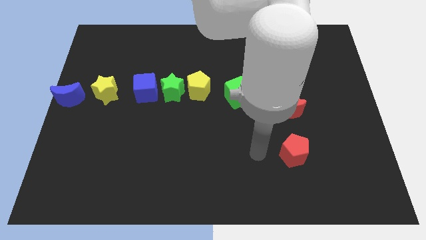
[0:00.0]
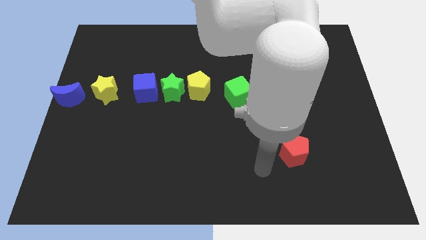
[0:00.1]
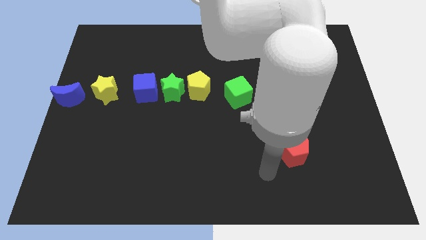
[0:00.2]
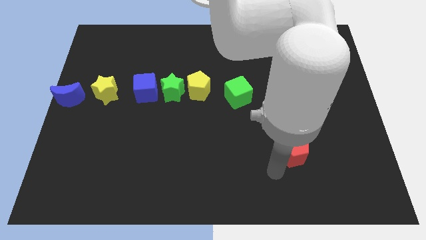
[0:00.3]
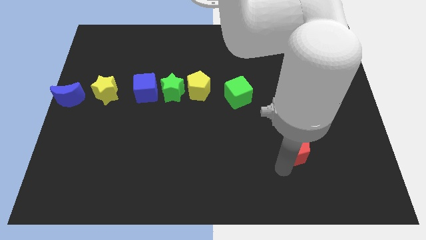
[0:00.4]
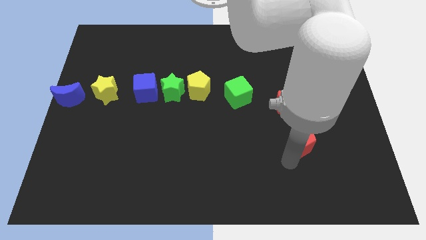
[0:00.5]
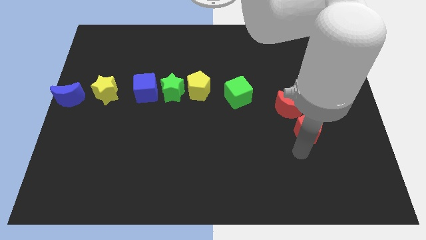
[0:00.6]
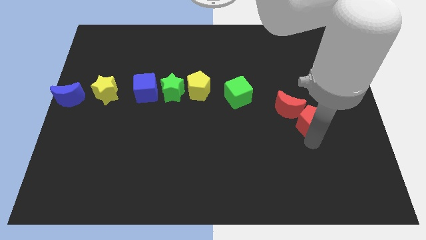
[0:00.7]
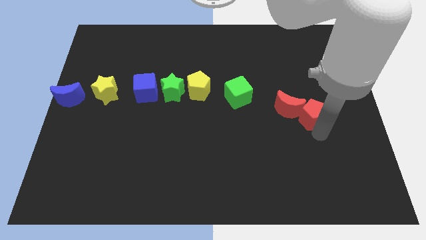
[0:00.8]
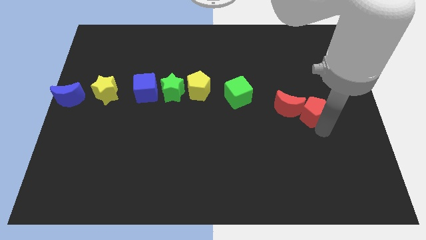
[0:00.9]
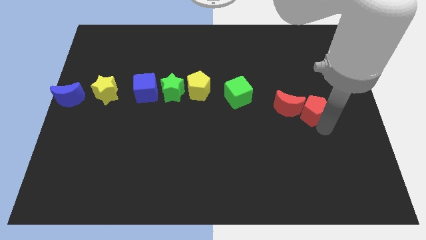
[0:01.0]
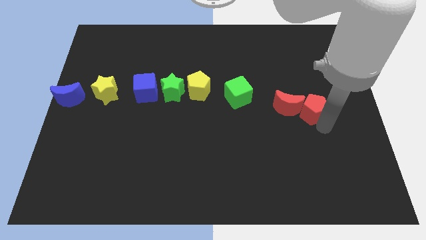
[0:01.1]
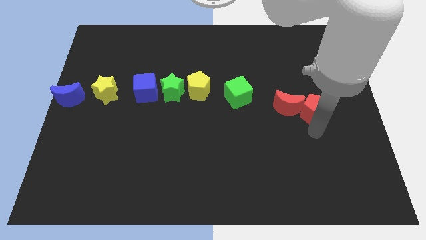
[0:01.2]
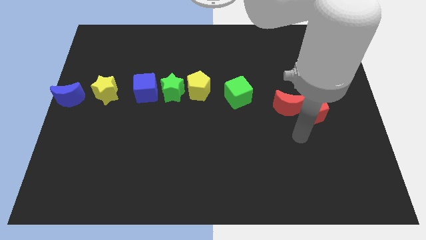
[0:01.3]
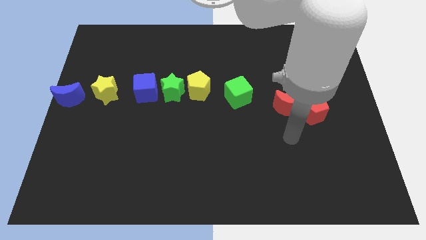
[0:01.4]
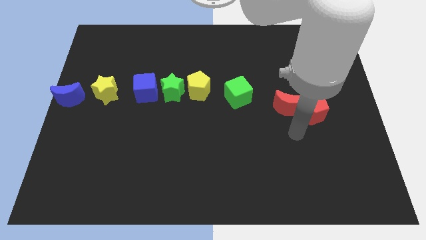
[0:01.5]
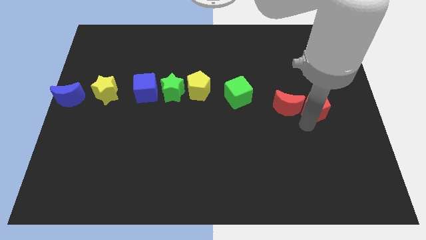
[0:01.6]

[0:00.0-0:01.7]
place red pentagon to the right side of red moon

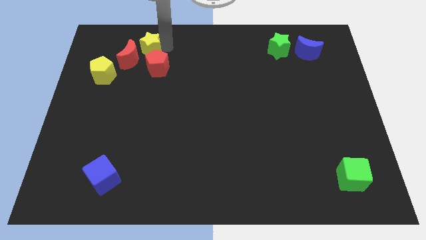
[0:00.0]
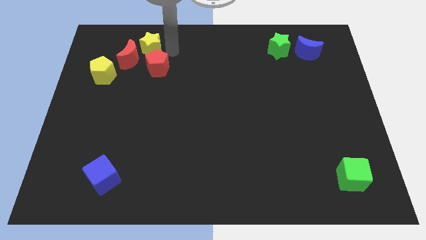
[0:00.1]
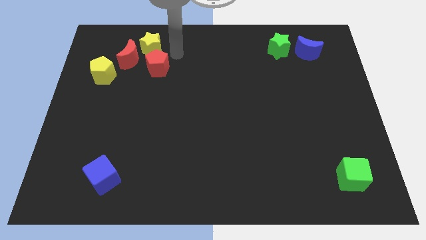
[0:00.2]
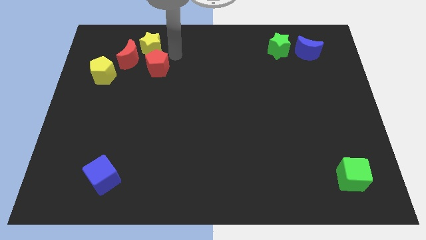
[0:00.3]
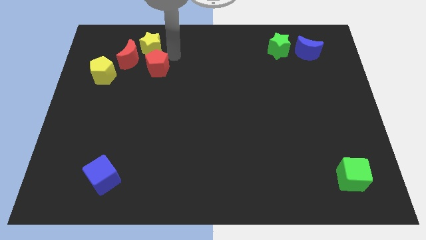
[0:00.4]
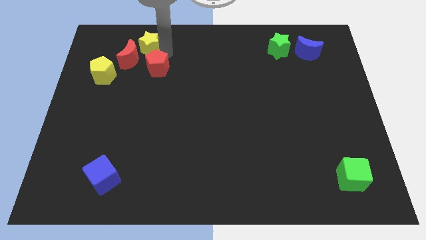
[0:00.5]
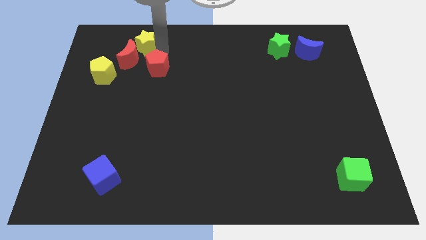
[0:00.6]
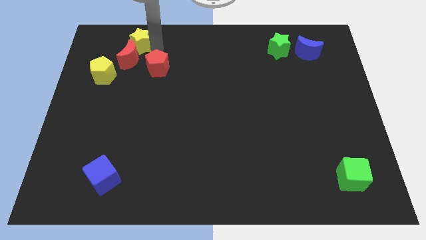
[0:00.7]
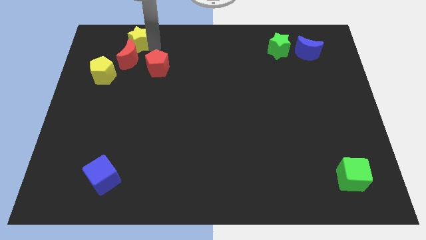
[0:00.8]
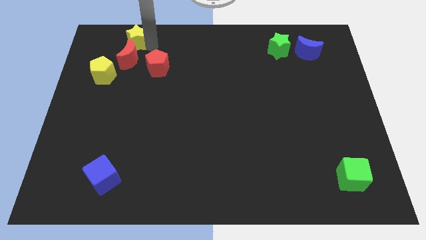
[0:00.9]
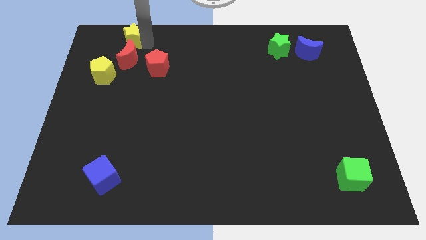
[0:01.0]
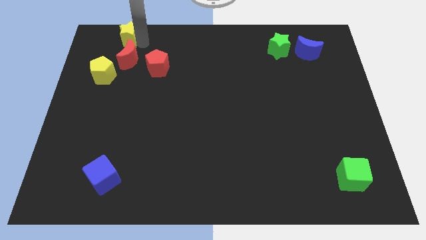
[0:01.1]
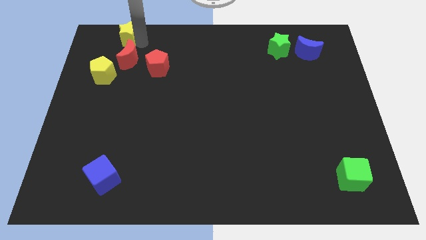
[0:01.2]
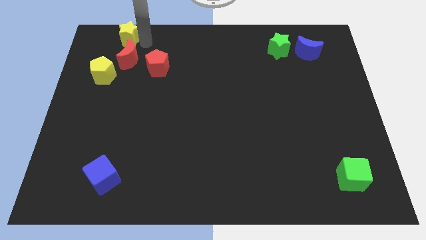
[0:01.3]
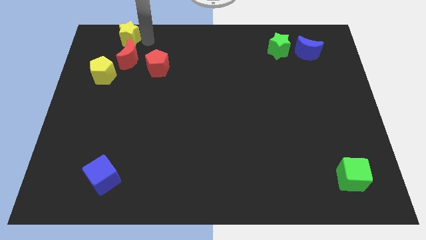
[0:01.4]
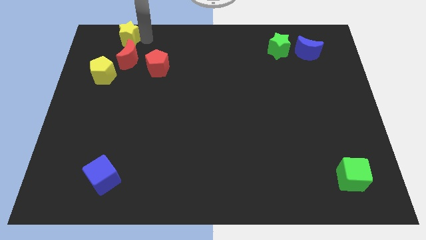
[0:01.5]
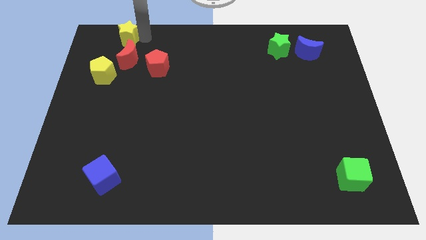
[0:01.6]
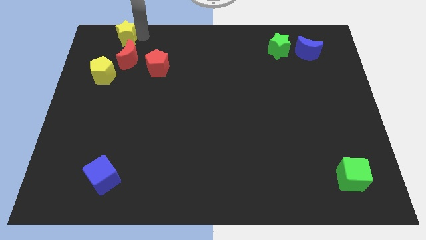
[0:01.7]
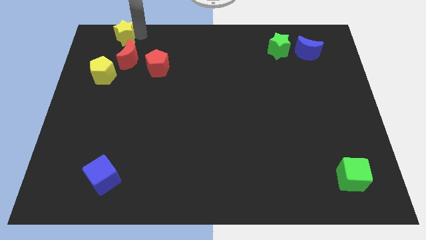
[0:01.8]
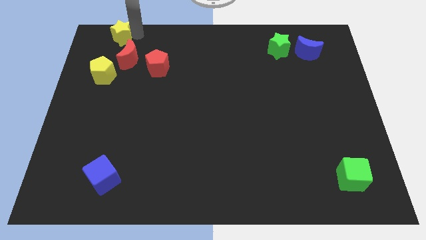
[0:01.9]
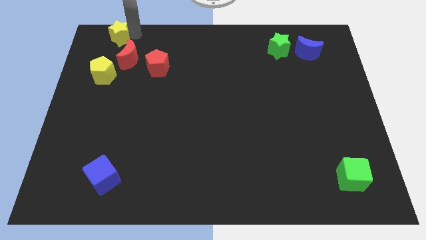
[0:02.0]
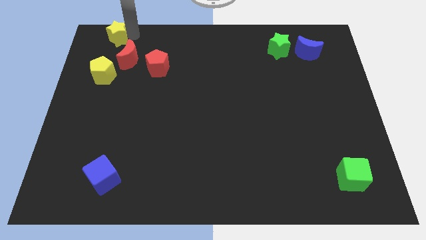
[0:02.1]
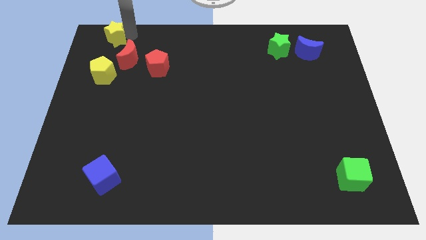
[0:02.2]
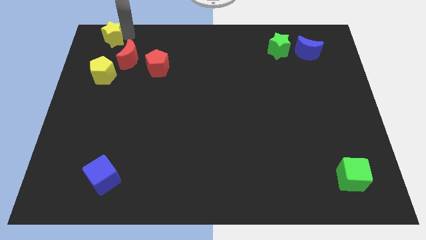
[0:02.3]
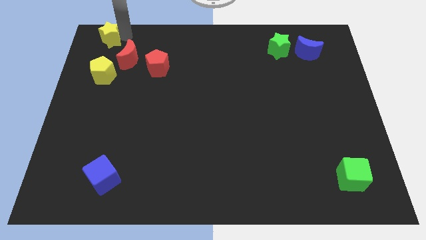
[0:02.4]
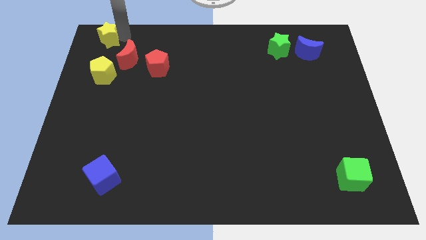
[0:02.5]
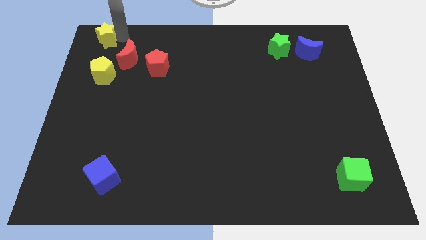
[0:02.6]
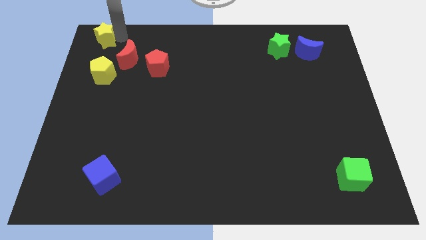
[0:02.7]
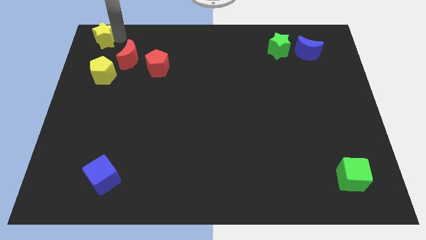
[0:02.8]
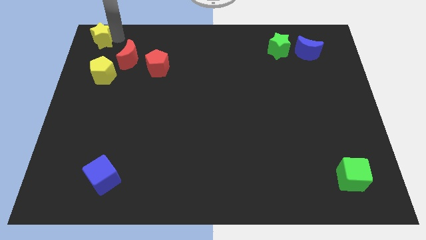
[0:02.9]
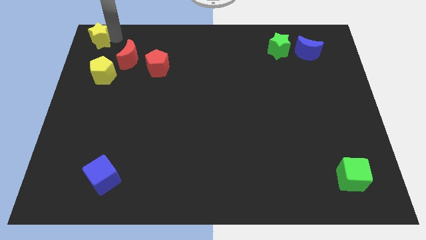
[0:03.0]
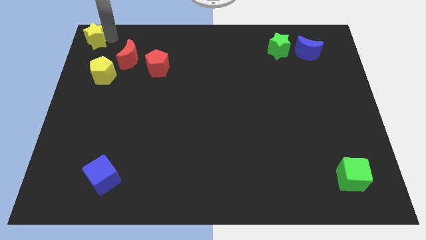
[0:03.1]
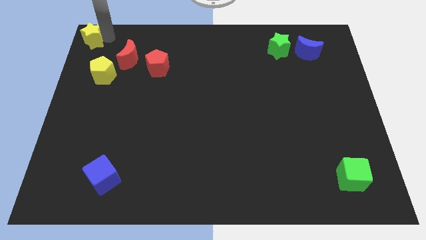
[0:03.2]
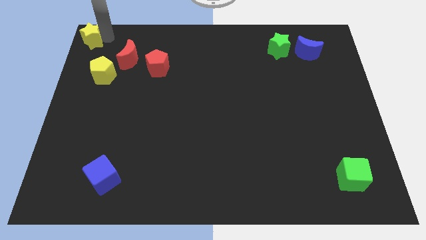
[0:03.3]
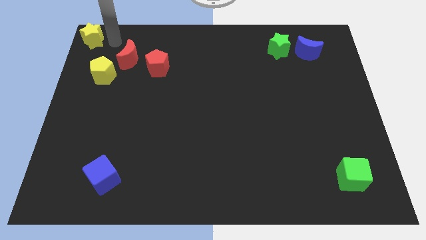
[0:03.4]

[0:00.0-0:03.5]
move the yellow star to the top left corner of the board

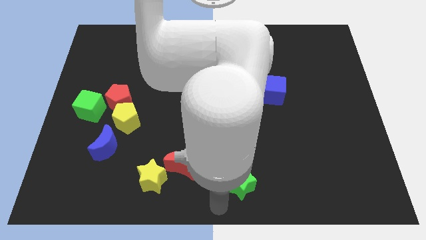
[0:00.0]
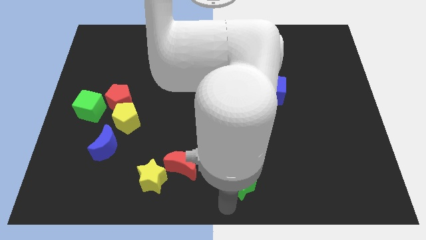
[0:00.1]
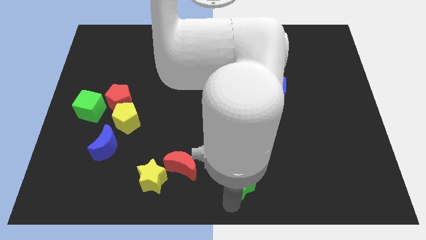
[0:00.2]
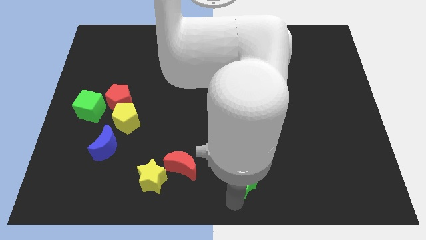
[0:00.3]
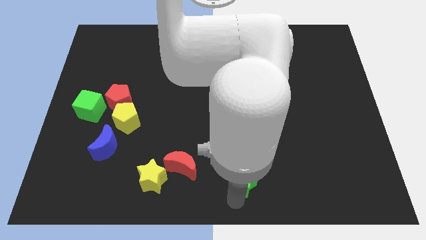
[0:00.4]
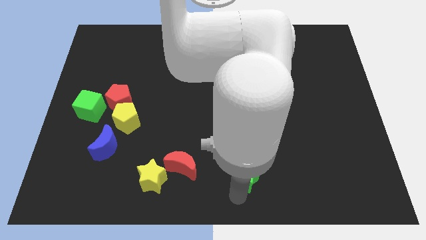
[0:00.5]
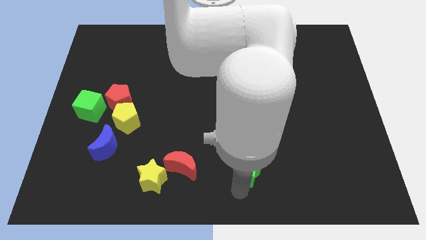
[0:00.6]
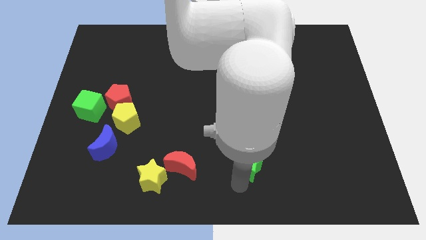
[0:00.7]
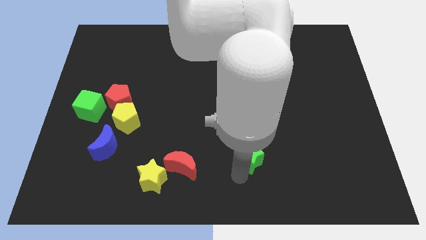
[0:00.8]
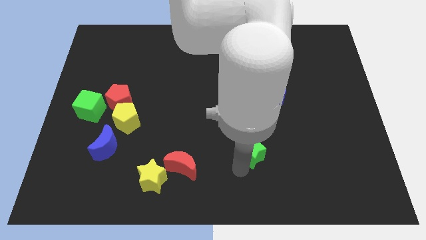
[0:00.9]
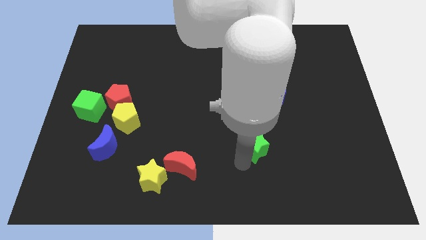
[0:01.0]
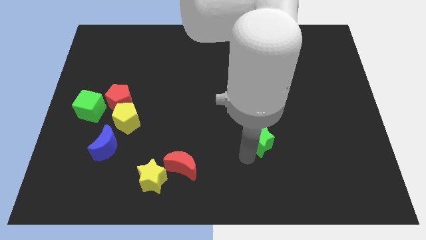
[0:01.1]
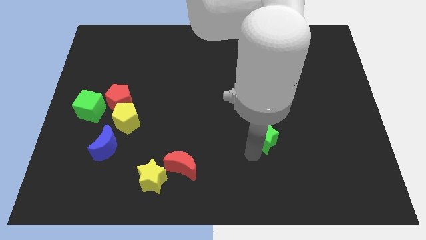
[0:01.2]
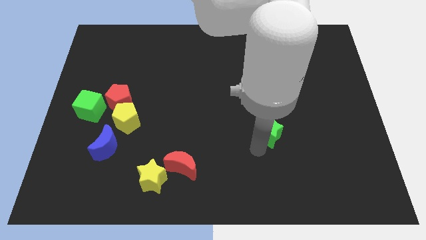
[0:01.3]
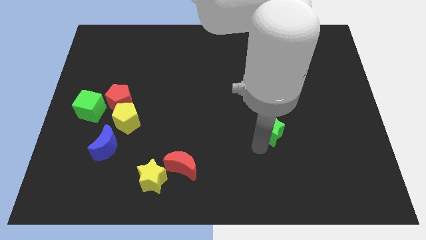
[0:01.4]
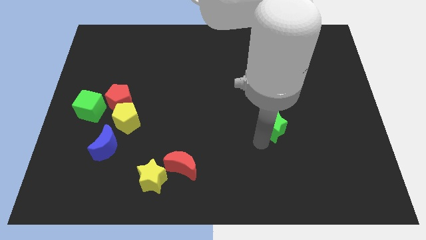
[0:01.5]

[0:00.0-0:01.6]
push the green star slightly to the top of the board

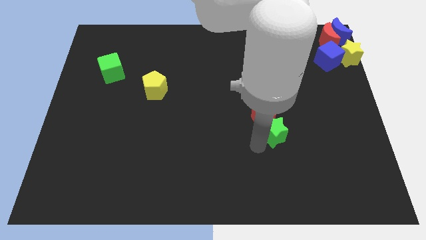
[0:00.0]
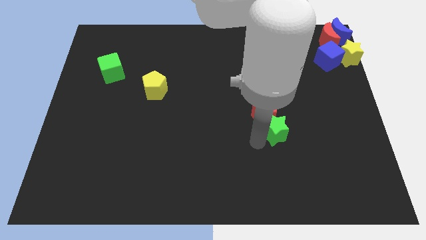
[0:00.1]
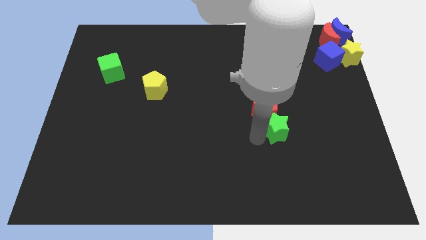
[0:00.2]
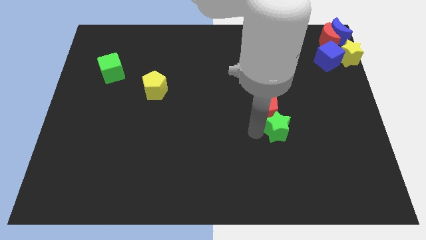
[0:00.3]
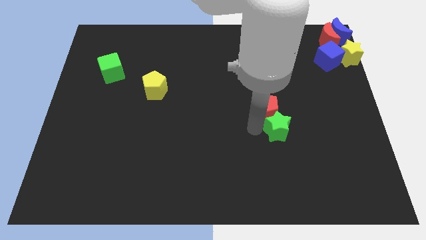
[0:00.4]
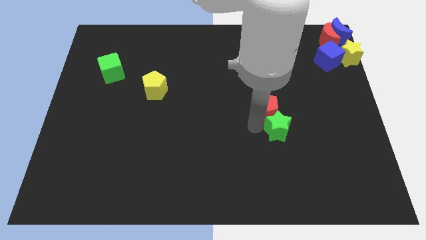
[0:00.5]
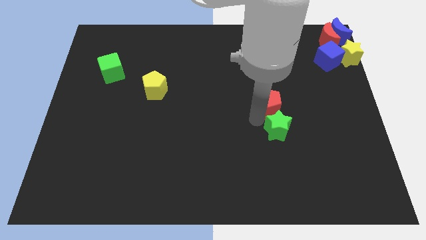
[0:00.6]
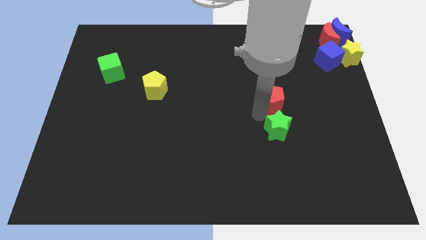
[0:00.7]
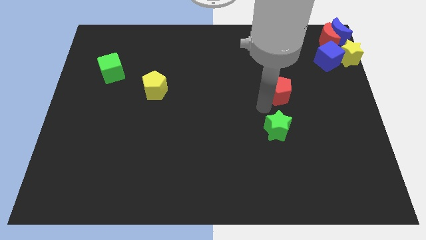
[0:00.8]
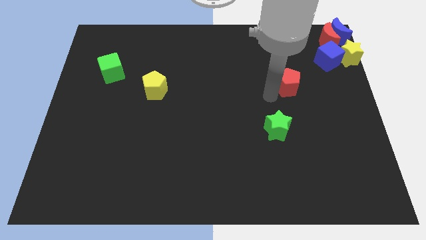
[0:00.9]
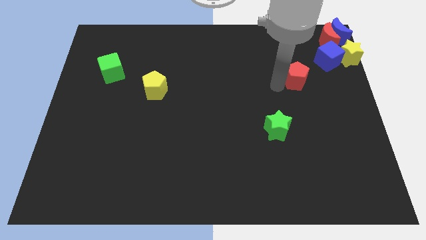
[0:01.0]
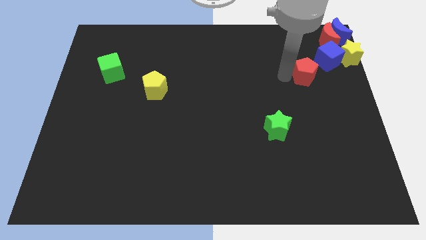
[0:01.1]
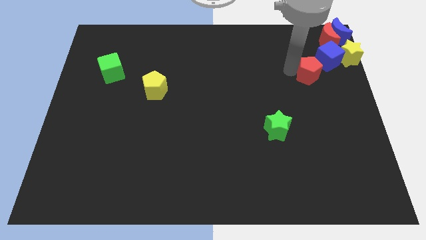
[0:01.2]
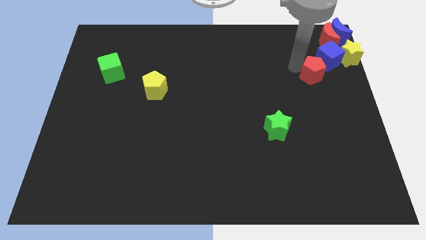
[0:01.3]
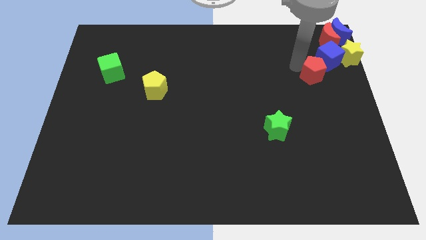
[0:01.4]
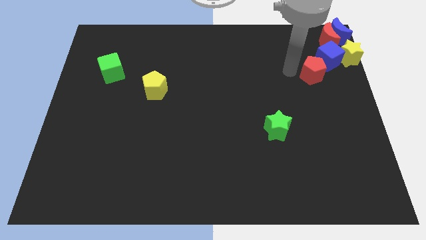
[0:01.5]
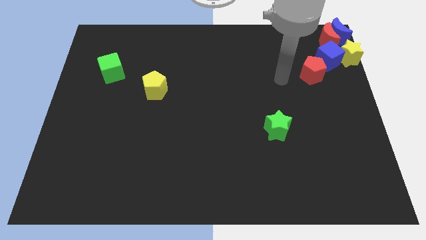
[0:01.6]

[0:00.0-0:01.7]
take the red pentagon close to the blue cube

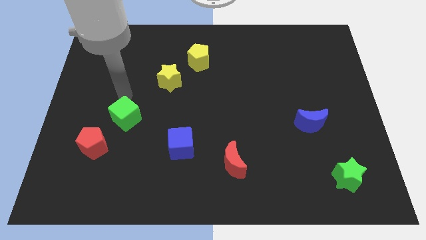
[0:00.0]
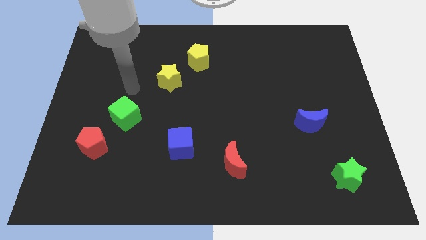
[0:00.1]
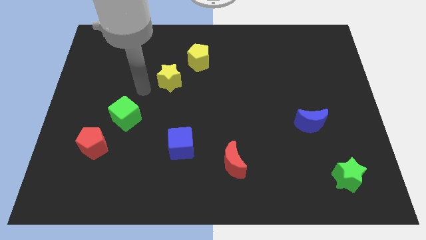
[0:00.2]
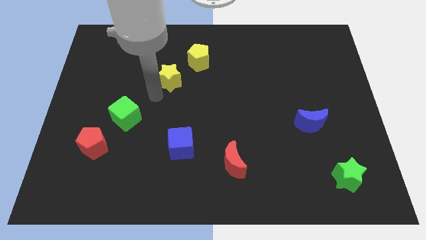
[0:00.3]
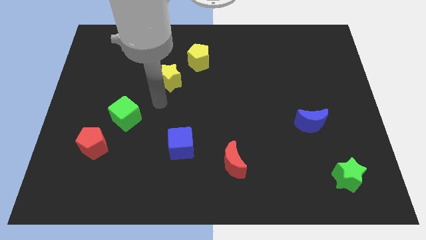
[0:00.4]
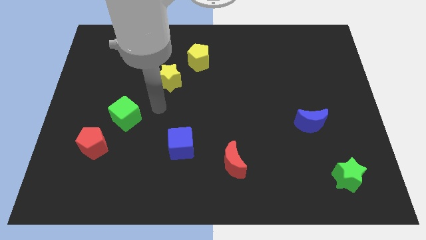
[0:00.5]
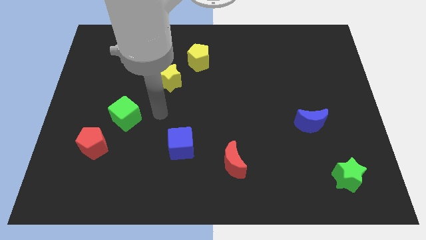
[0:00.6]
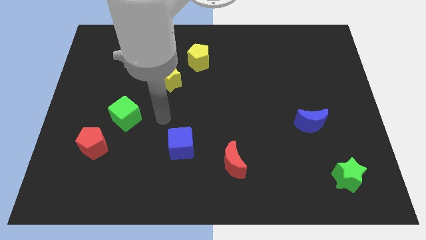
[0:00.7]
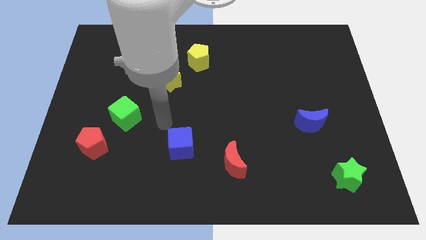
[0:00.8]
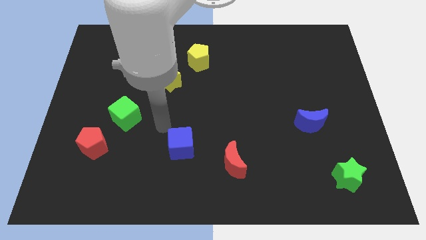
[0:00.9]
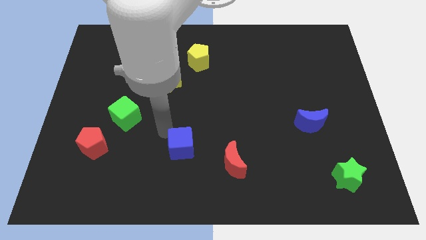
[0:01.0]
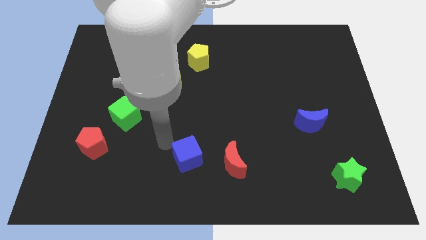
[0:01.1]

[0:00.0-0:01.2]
point your arm at the top left side of blue cube
